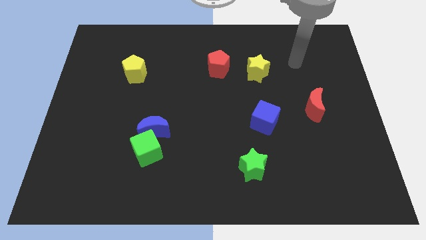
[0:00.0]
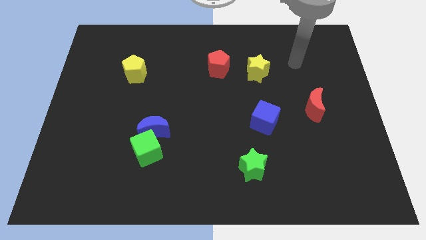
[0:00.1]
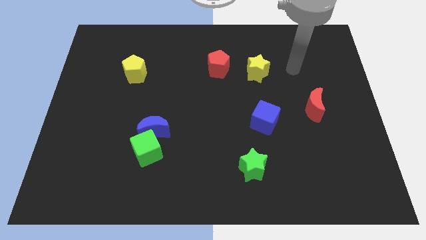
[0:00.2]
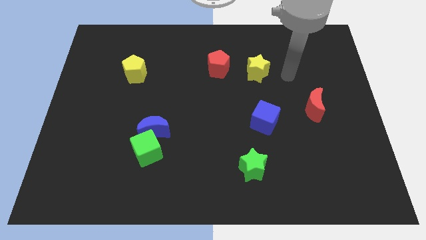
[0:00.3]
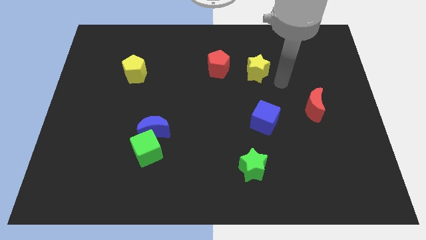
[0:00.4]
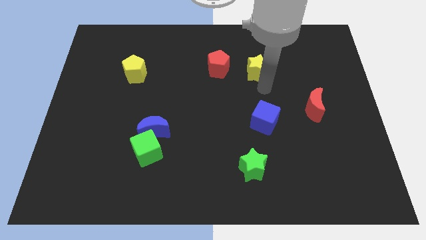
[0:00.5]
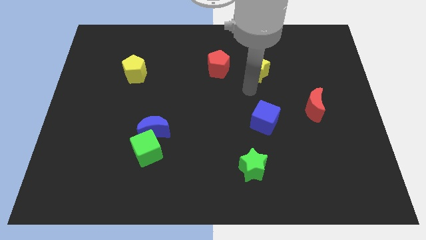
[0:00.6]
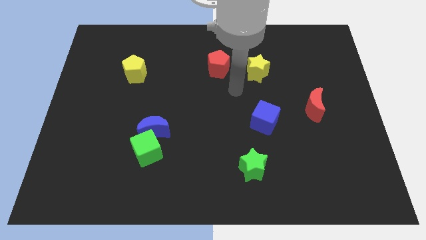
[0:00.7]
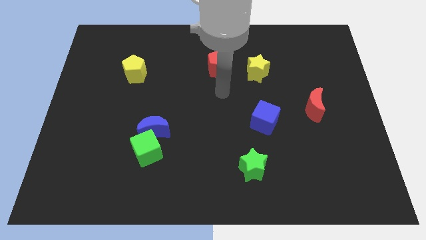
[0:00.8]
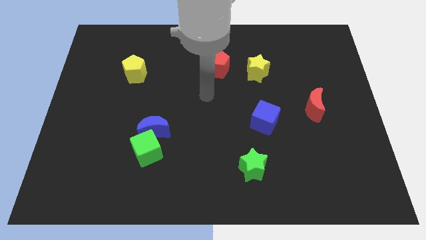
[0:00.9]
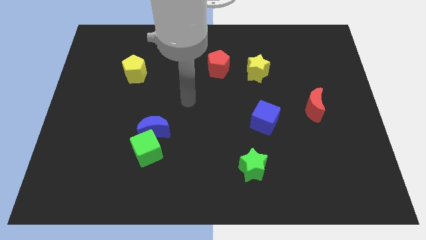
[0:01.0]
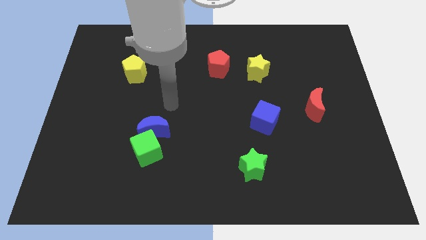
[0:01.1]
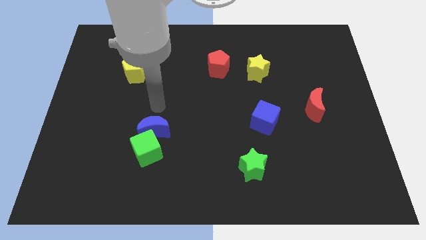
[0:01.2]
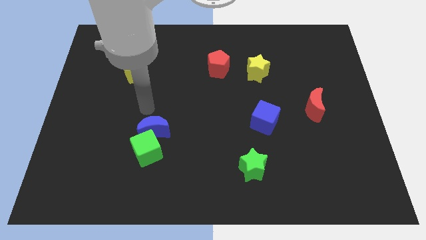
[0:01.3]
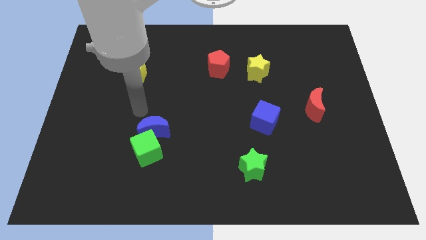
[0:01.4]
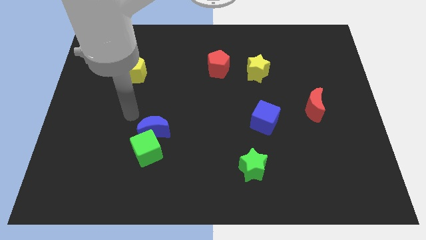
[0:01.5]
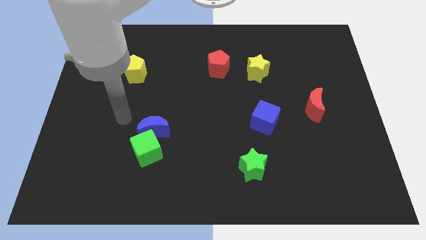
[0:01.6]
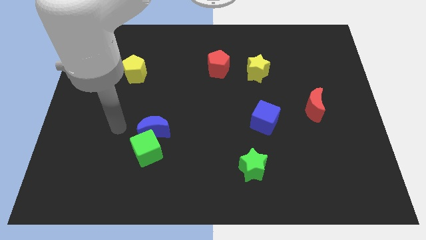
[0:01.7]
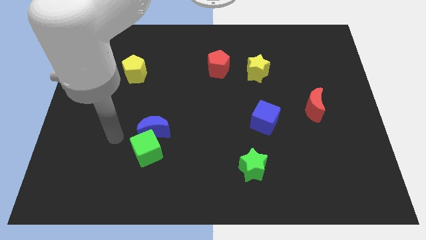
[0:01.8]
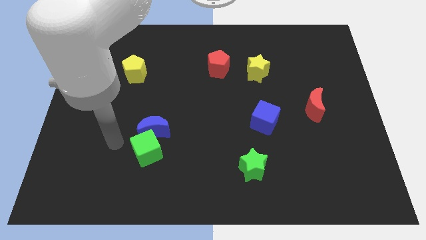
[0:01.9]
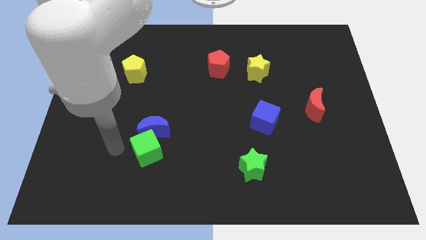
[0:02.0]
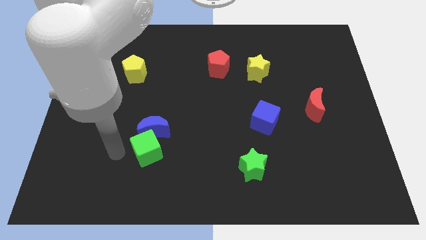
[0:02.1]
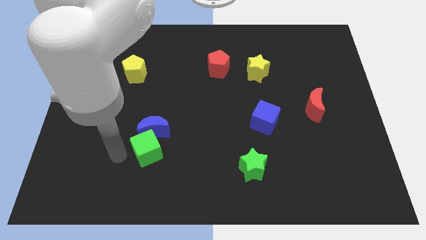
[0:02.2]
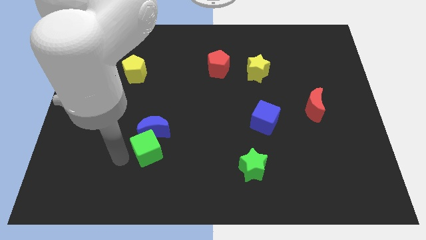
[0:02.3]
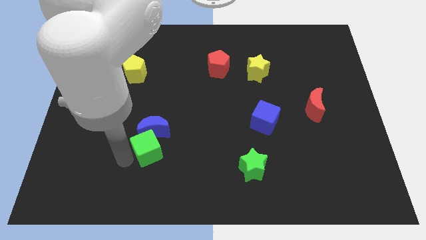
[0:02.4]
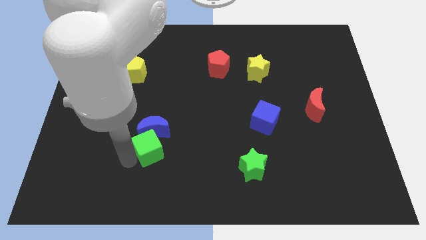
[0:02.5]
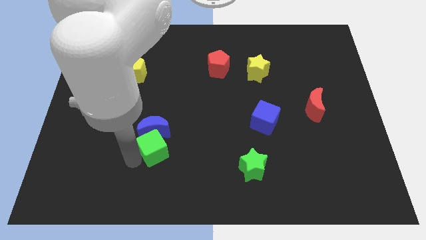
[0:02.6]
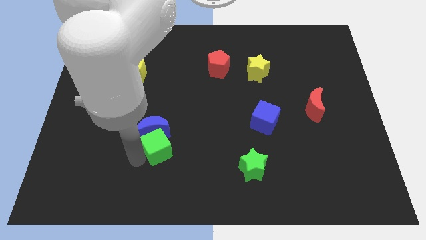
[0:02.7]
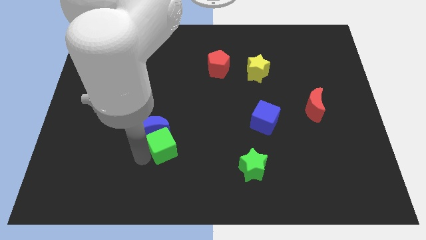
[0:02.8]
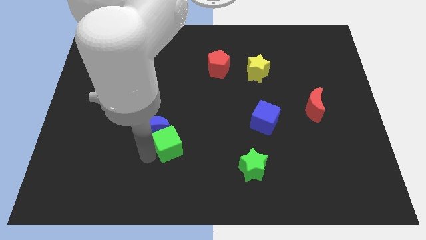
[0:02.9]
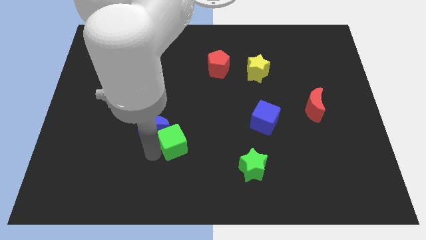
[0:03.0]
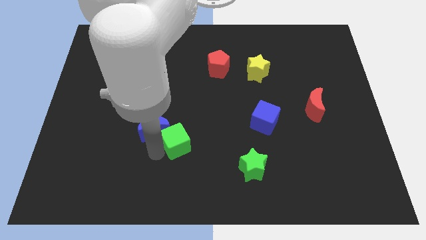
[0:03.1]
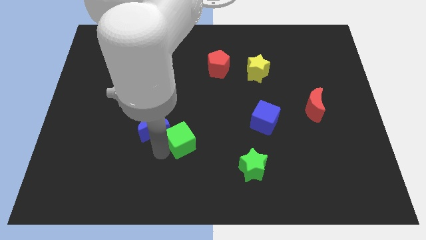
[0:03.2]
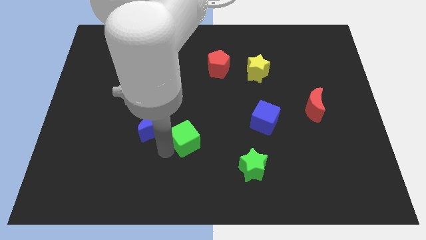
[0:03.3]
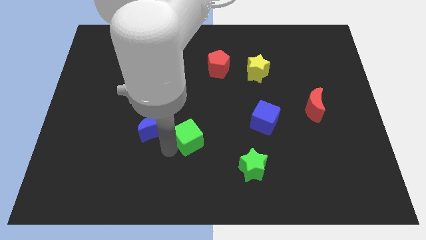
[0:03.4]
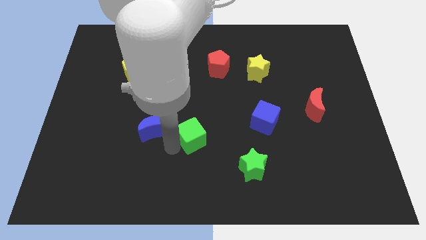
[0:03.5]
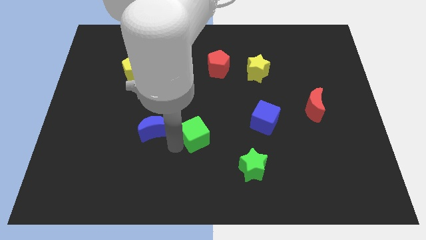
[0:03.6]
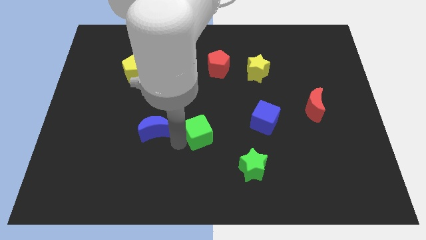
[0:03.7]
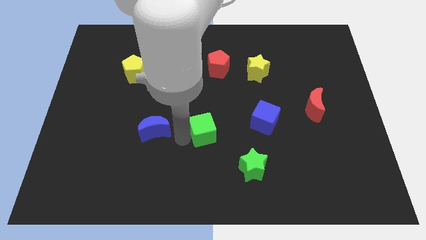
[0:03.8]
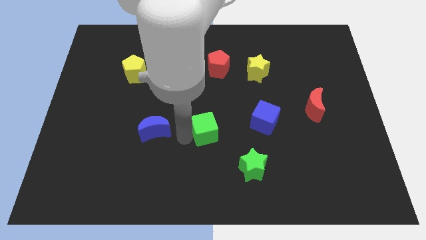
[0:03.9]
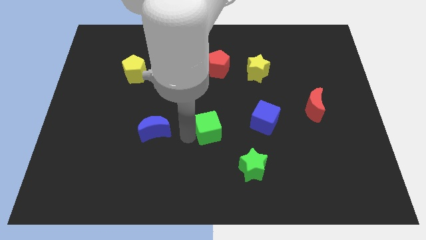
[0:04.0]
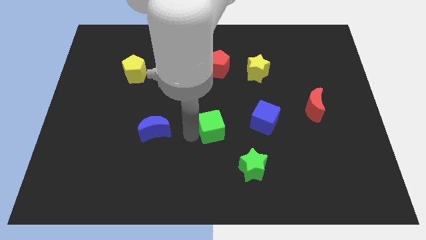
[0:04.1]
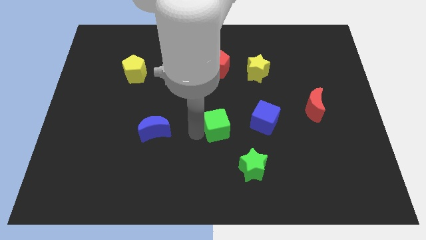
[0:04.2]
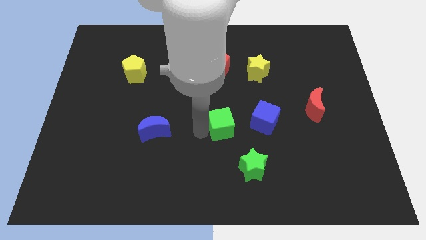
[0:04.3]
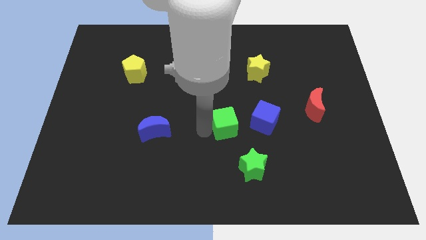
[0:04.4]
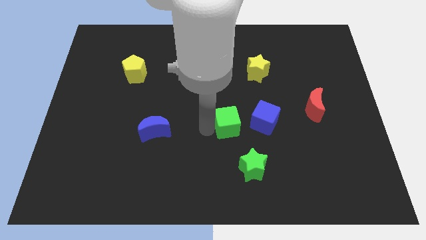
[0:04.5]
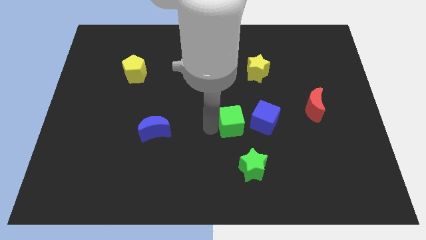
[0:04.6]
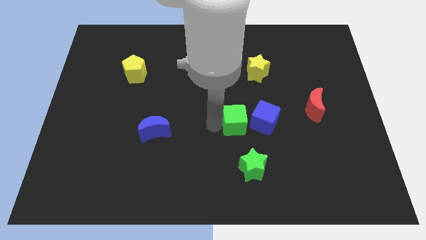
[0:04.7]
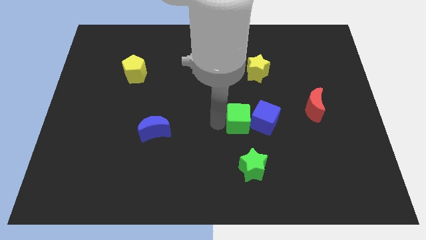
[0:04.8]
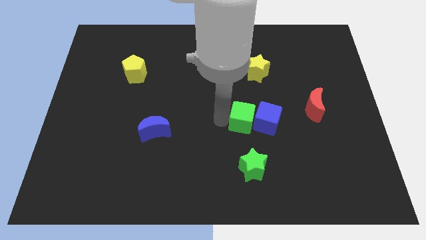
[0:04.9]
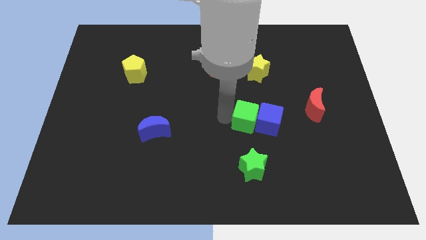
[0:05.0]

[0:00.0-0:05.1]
slide the green cube next to the blue cube

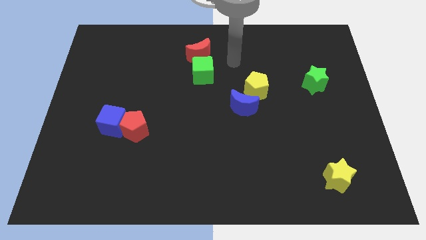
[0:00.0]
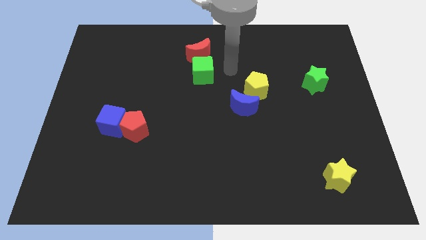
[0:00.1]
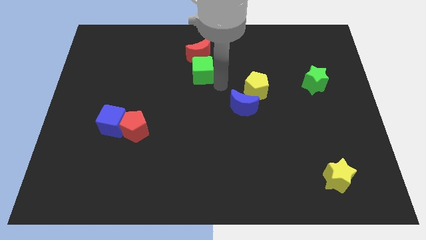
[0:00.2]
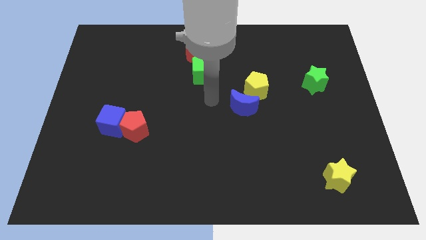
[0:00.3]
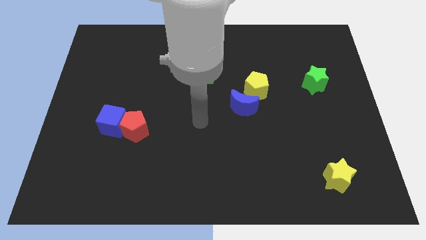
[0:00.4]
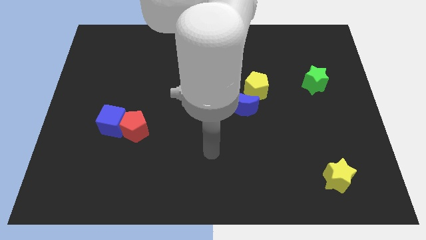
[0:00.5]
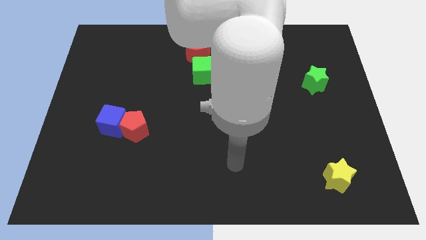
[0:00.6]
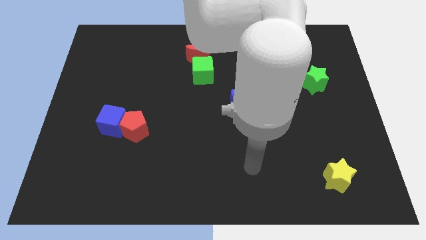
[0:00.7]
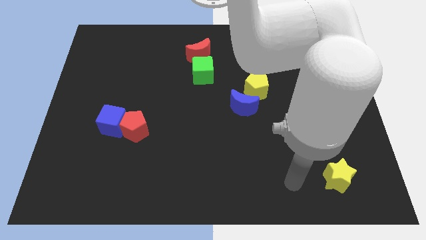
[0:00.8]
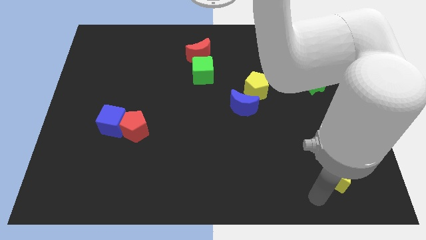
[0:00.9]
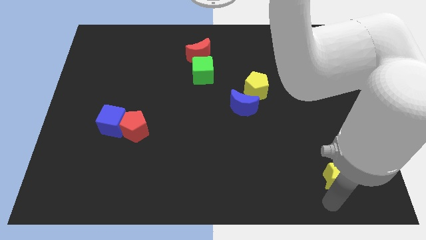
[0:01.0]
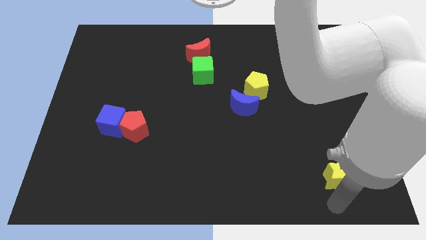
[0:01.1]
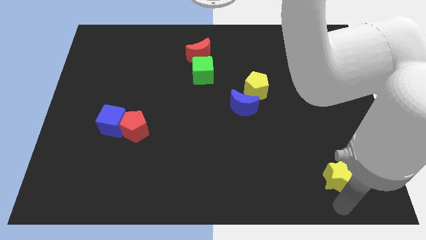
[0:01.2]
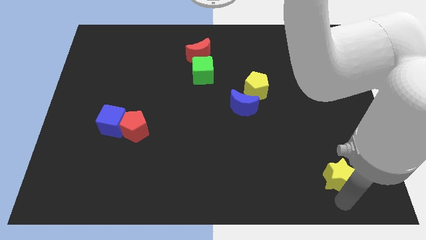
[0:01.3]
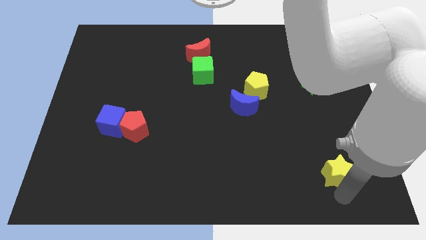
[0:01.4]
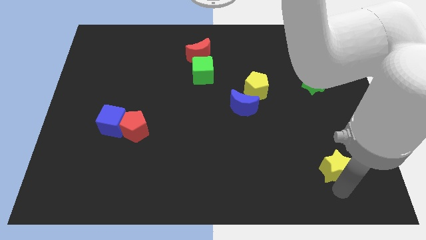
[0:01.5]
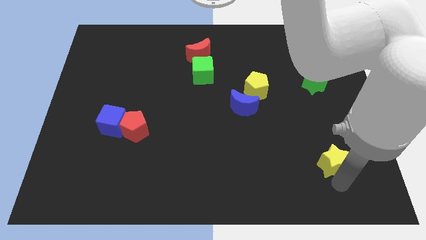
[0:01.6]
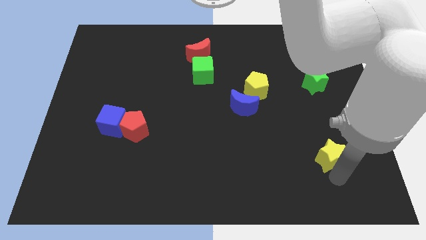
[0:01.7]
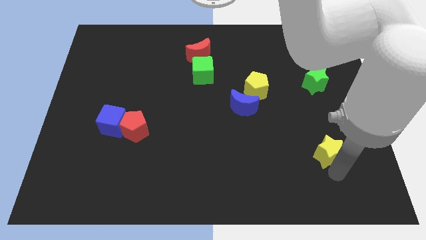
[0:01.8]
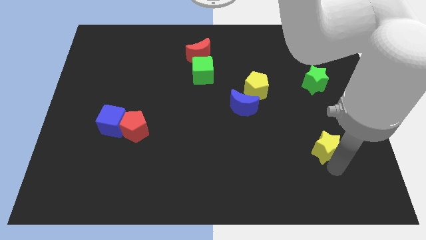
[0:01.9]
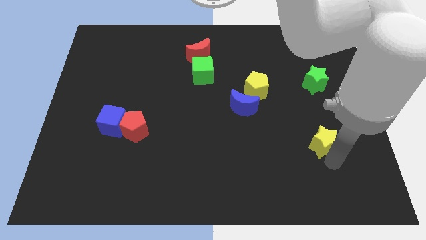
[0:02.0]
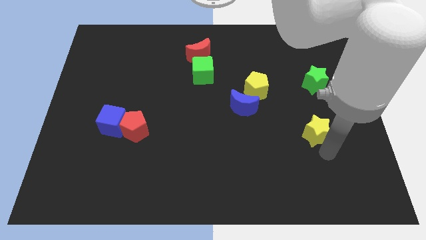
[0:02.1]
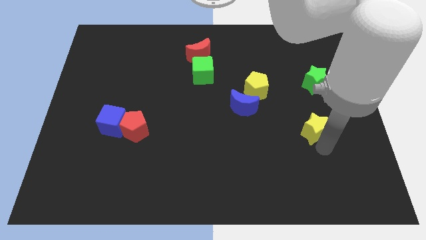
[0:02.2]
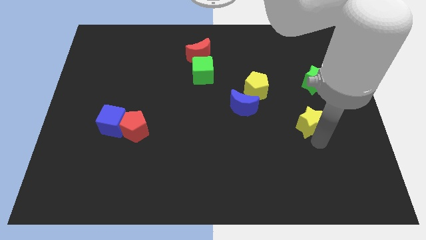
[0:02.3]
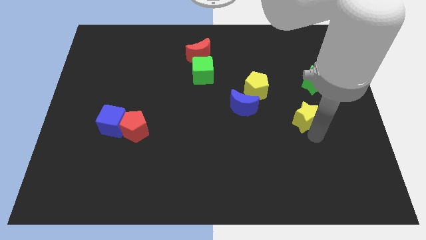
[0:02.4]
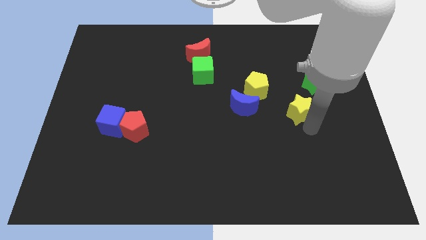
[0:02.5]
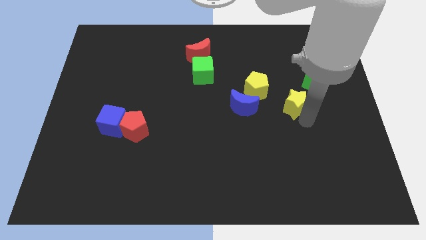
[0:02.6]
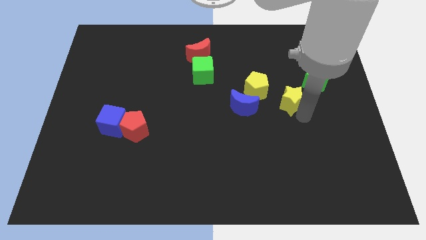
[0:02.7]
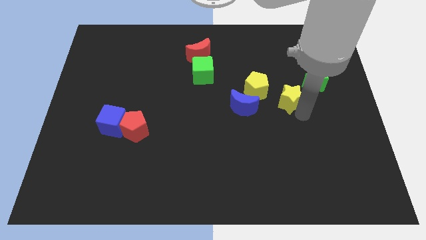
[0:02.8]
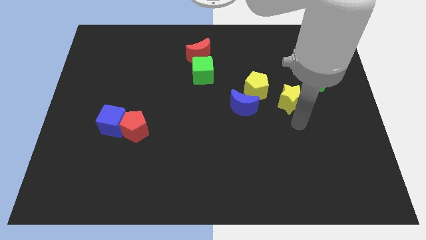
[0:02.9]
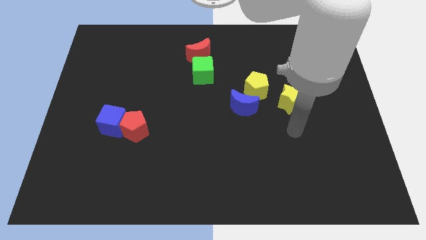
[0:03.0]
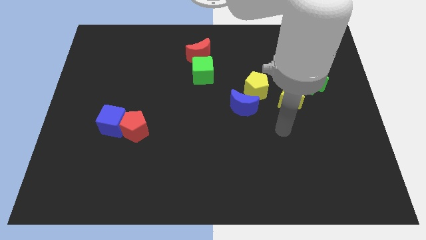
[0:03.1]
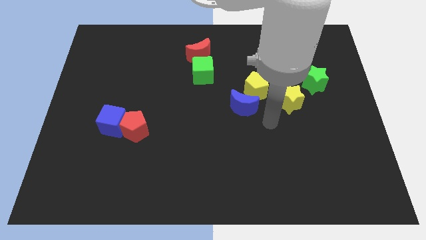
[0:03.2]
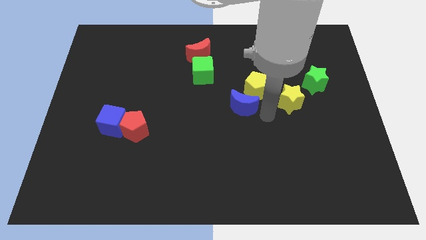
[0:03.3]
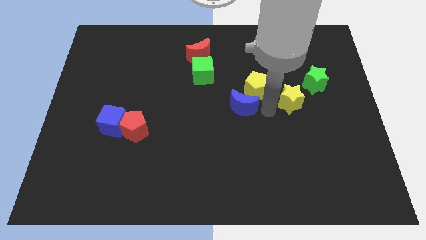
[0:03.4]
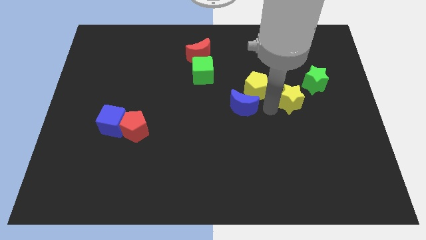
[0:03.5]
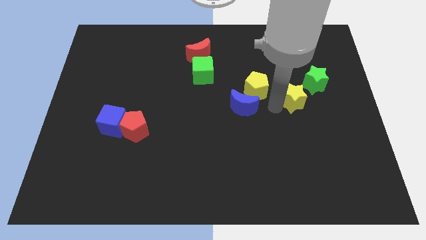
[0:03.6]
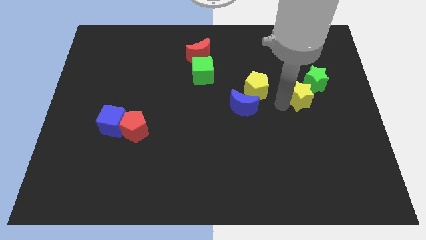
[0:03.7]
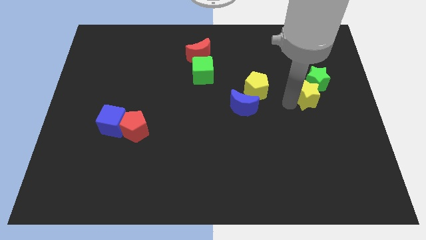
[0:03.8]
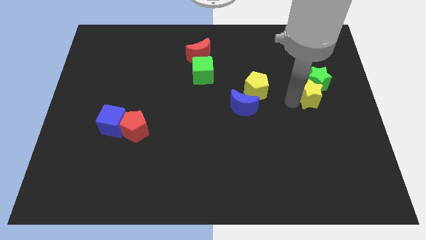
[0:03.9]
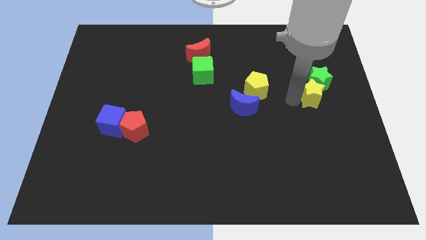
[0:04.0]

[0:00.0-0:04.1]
slide the yellow star to the green star
